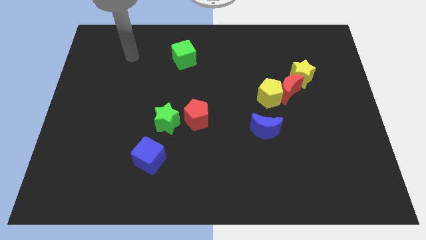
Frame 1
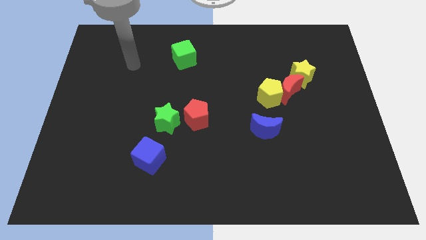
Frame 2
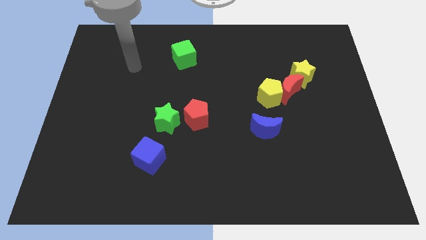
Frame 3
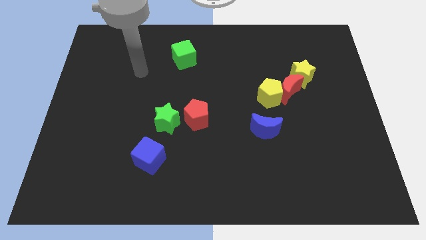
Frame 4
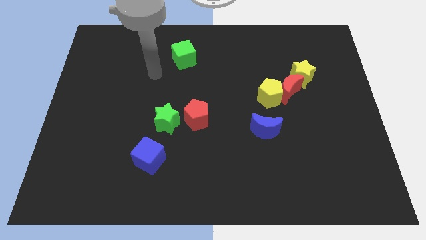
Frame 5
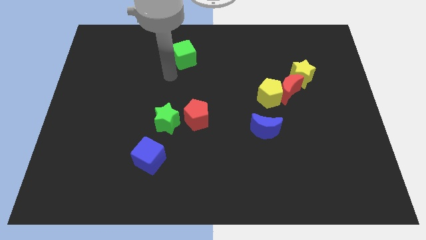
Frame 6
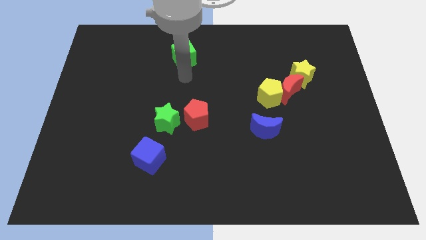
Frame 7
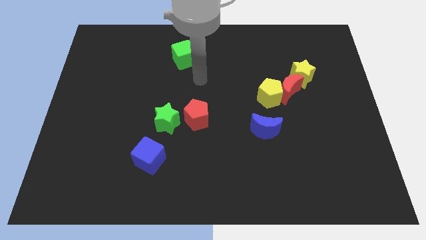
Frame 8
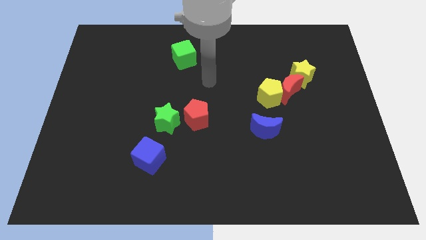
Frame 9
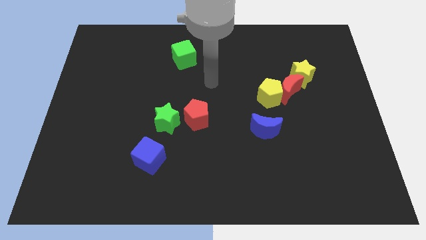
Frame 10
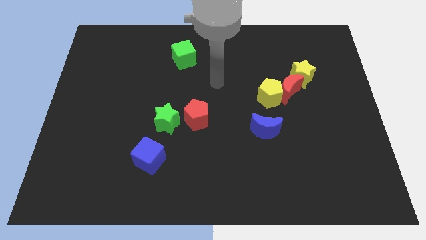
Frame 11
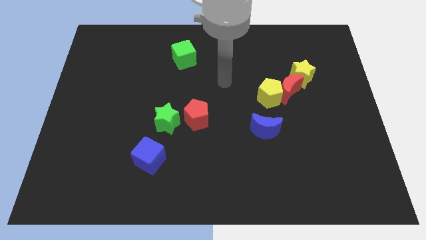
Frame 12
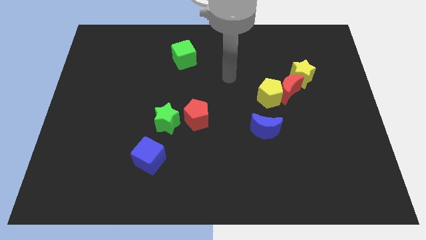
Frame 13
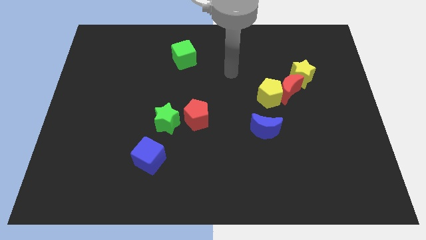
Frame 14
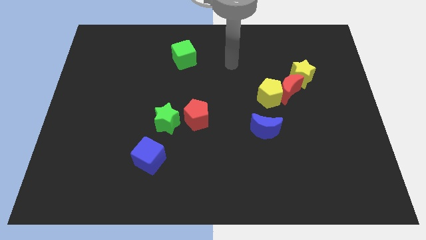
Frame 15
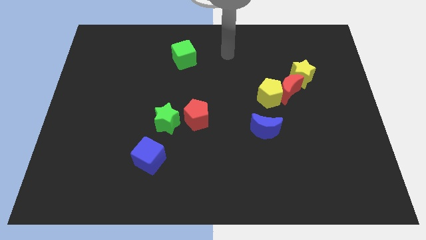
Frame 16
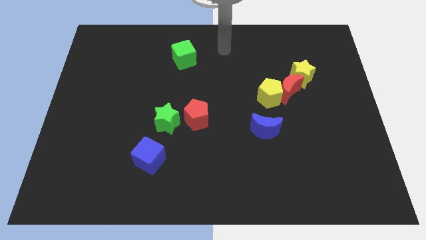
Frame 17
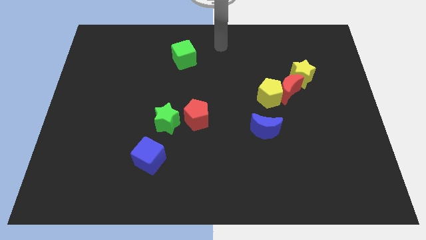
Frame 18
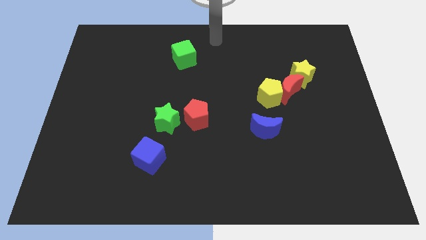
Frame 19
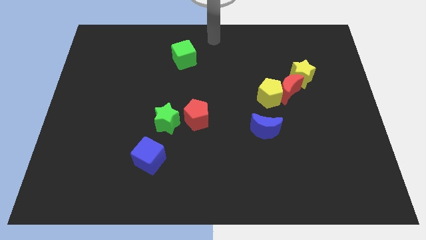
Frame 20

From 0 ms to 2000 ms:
place your hand at the top center

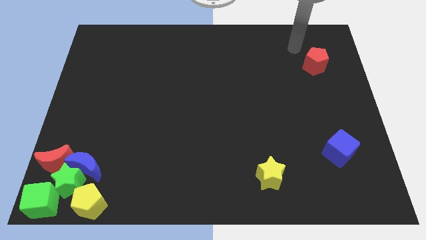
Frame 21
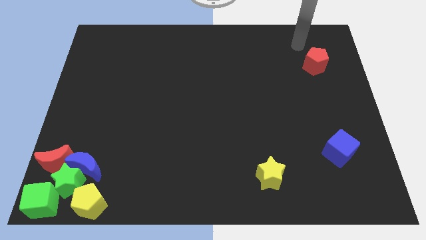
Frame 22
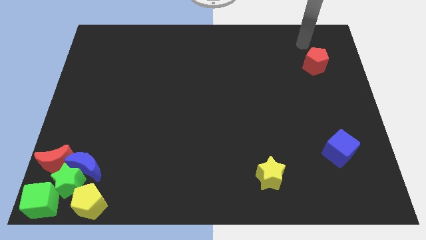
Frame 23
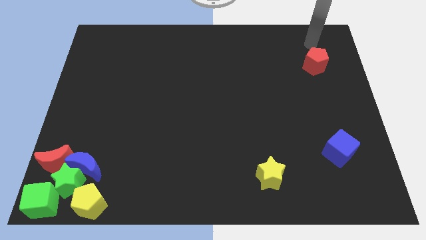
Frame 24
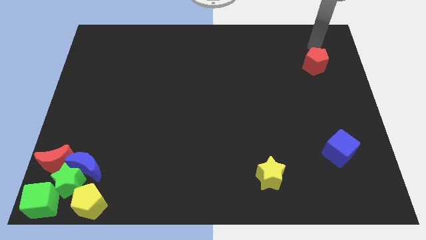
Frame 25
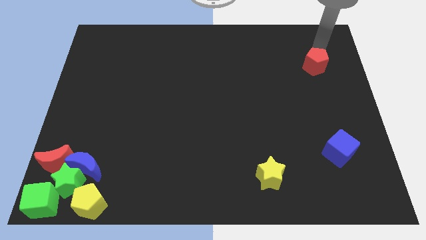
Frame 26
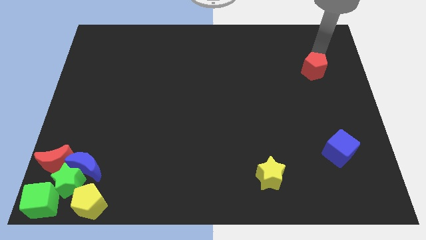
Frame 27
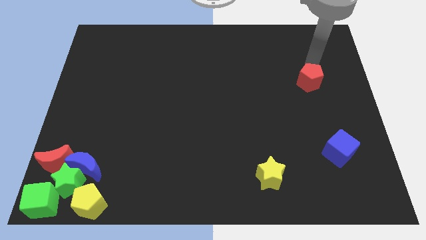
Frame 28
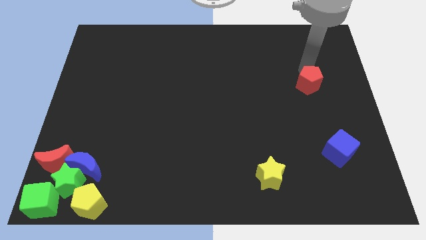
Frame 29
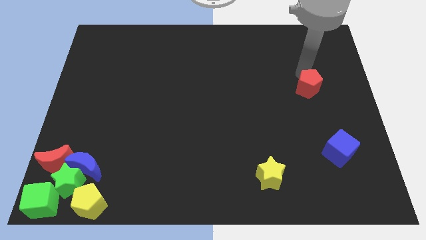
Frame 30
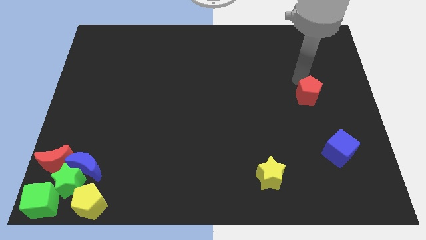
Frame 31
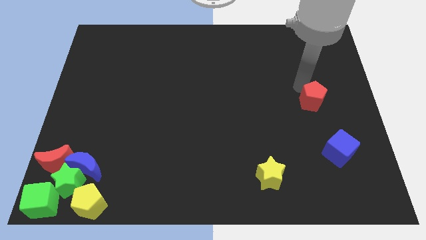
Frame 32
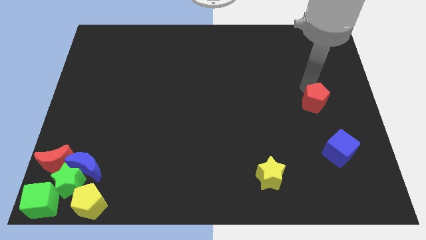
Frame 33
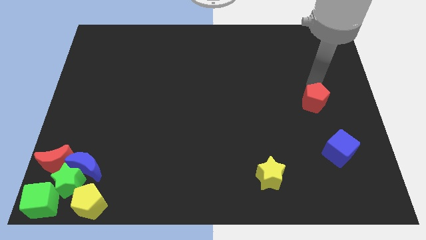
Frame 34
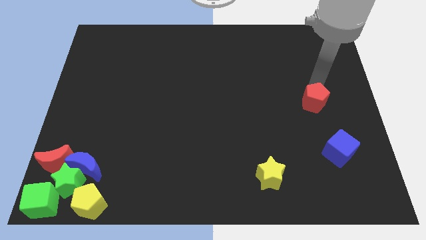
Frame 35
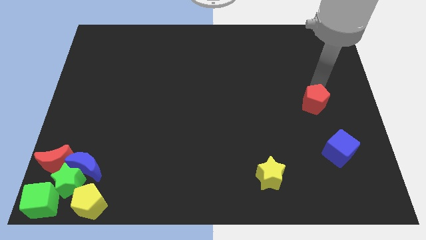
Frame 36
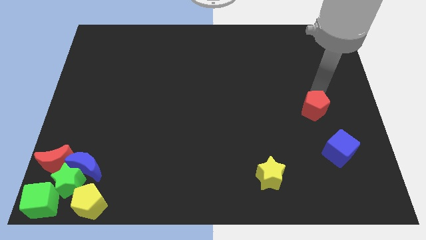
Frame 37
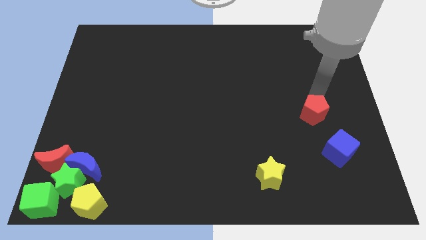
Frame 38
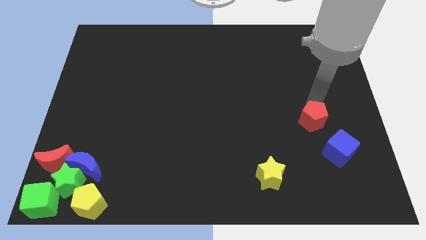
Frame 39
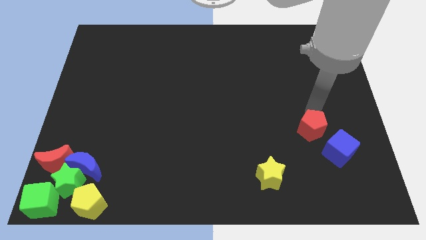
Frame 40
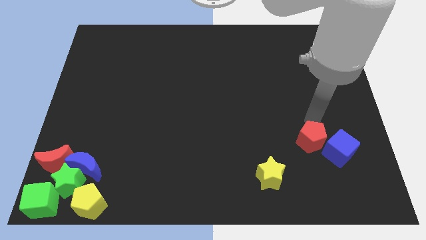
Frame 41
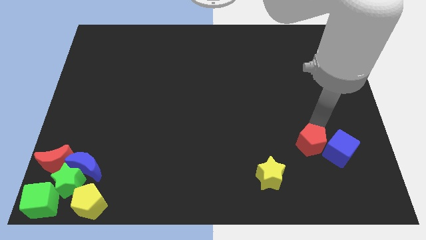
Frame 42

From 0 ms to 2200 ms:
push the red pentagon to the left of the blue cube

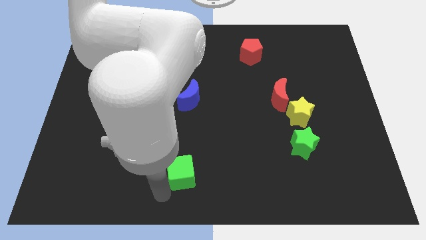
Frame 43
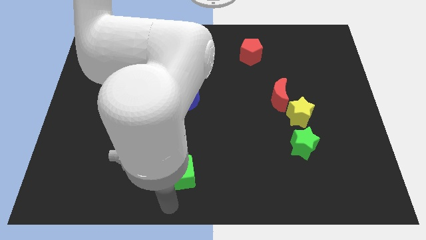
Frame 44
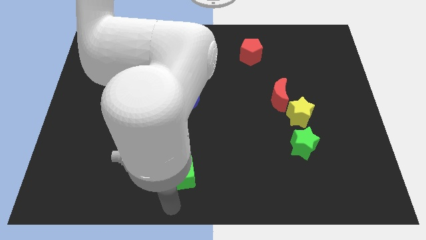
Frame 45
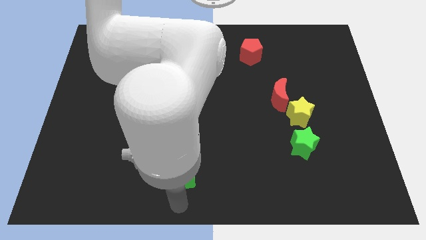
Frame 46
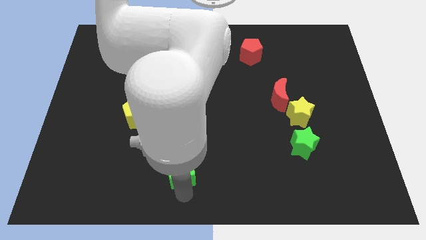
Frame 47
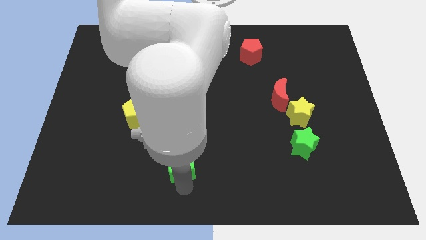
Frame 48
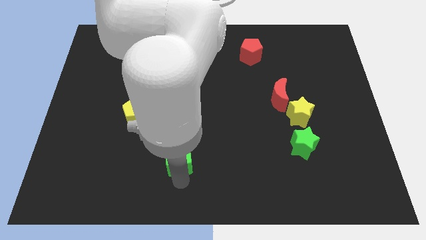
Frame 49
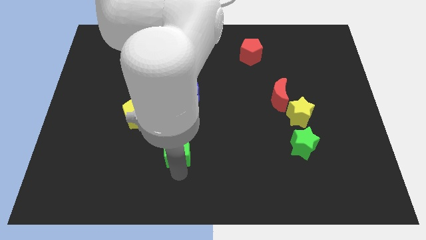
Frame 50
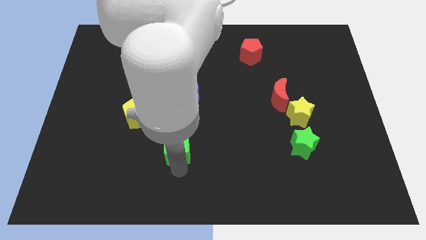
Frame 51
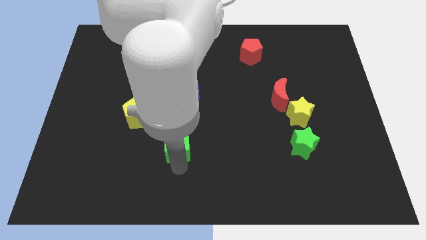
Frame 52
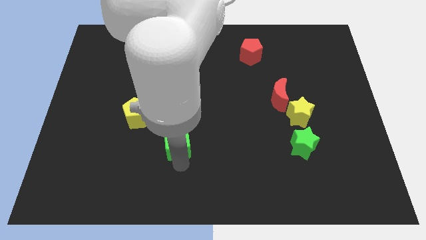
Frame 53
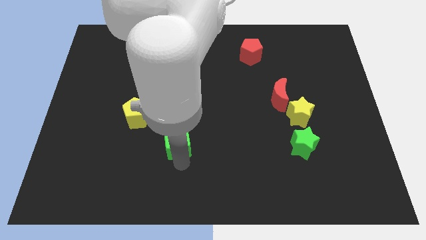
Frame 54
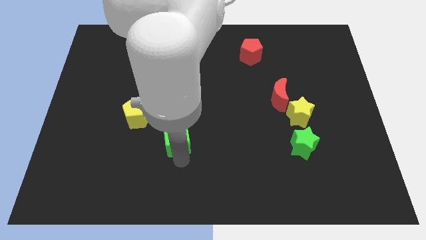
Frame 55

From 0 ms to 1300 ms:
push the green cube slightly top of the board

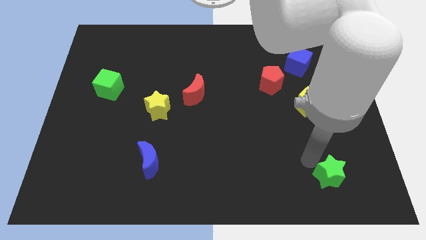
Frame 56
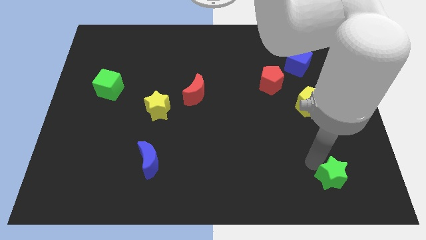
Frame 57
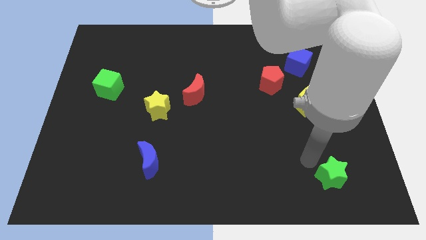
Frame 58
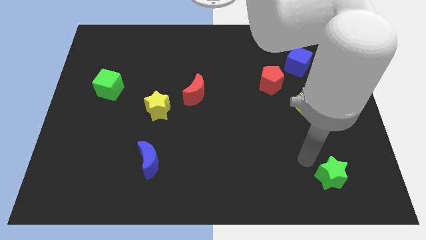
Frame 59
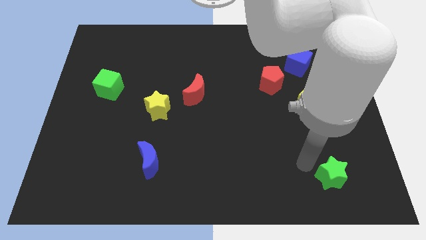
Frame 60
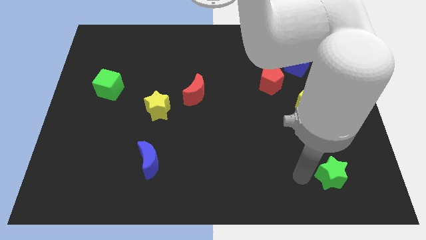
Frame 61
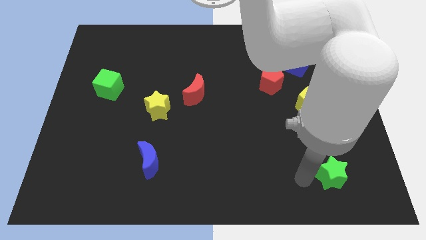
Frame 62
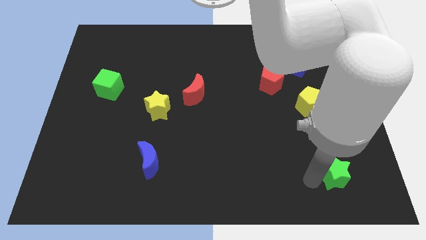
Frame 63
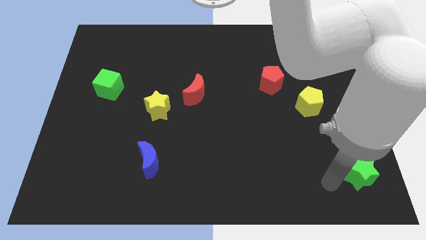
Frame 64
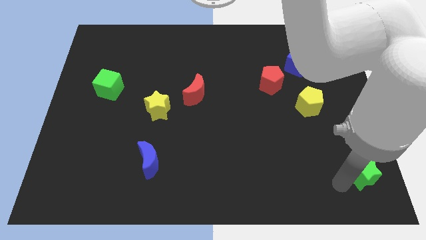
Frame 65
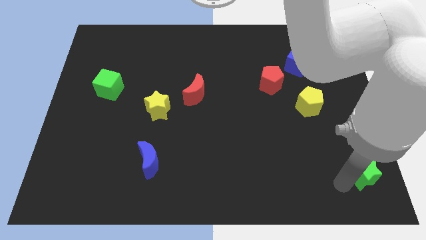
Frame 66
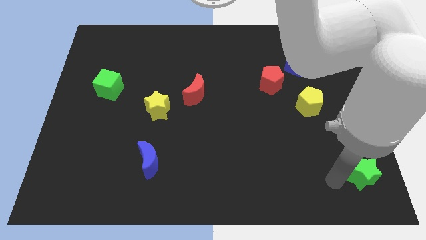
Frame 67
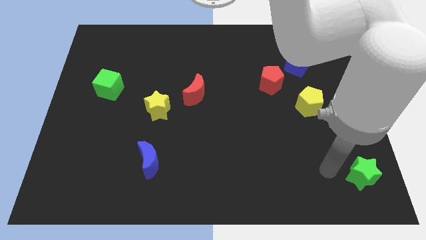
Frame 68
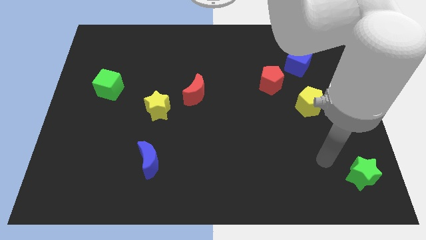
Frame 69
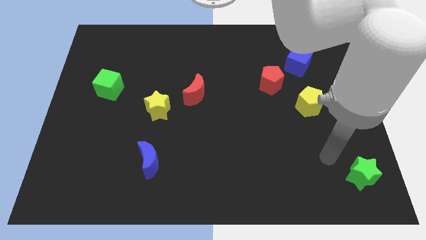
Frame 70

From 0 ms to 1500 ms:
push the green star to the bottom right of the board

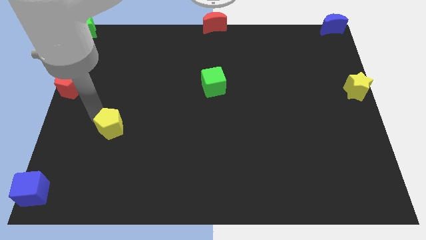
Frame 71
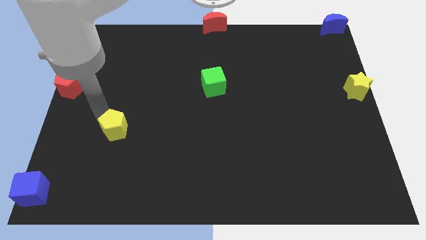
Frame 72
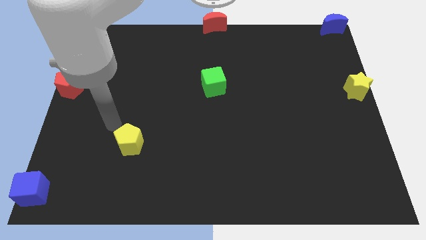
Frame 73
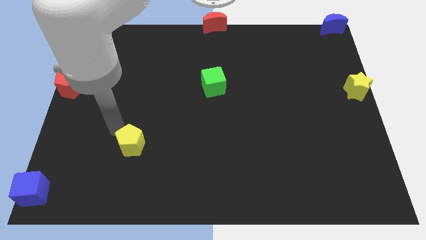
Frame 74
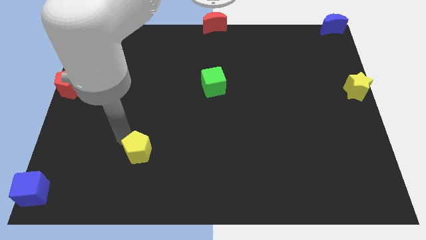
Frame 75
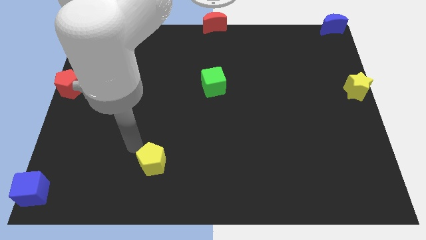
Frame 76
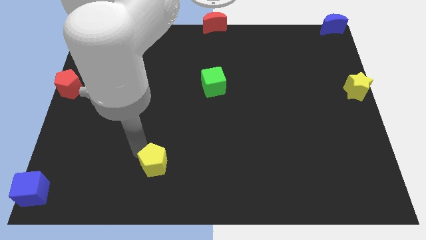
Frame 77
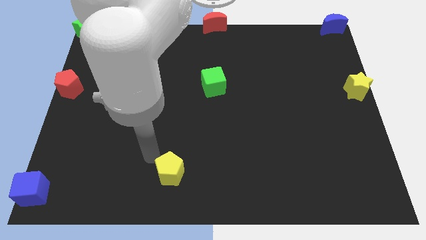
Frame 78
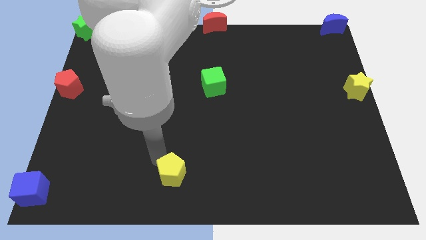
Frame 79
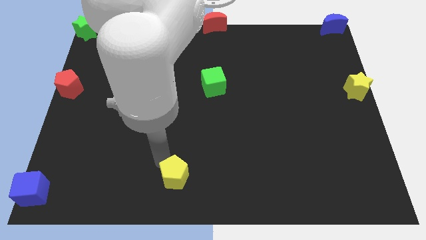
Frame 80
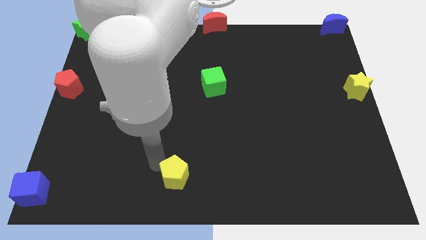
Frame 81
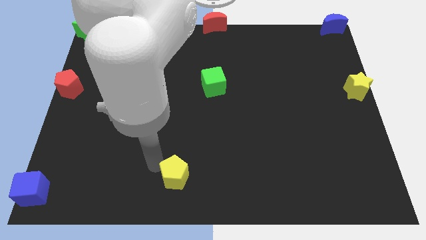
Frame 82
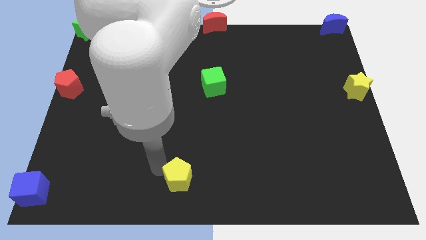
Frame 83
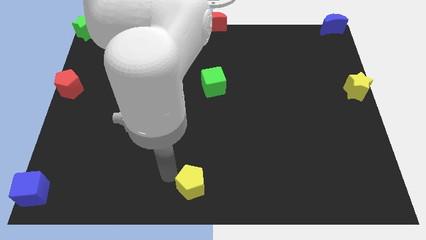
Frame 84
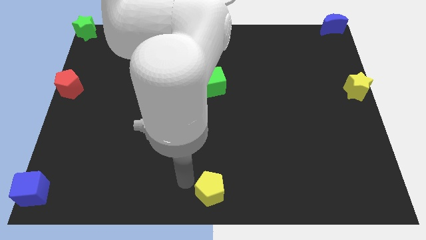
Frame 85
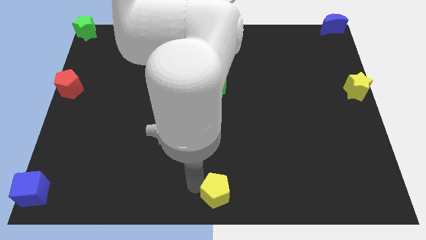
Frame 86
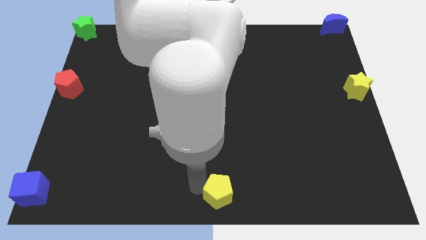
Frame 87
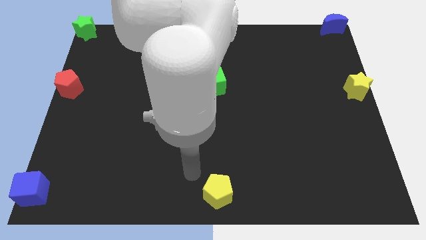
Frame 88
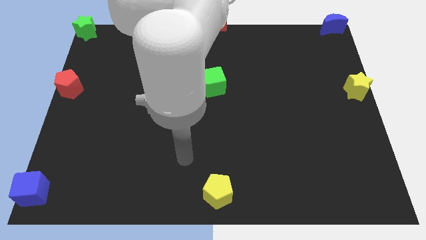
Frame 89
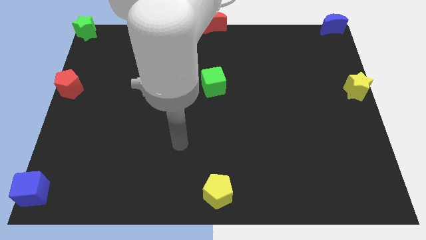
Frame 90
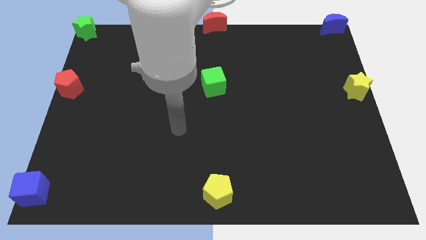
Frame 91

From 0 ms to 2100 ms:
push the yellow pentagon to the bottom center of the board
